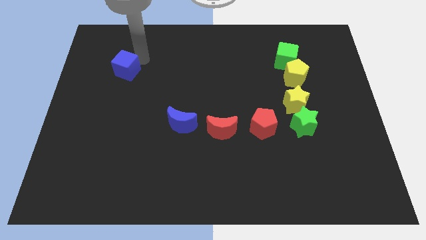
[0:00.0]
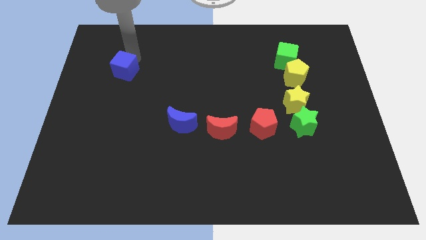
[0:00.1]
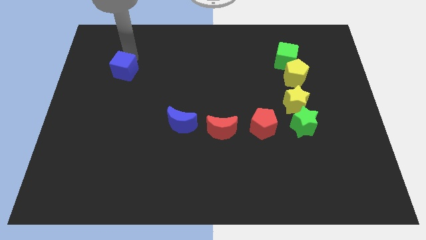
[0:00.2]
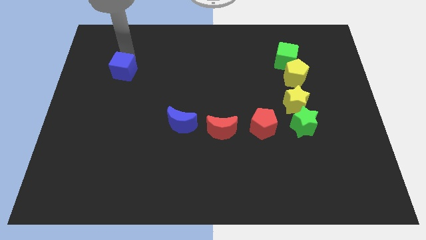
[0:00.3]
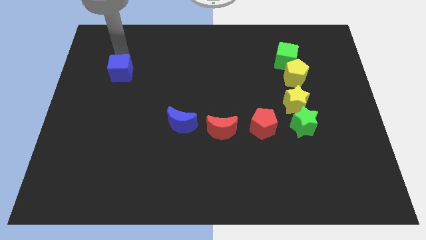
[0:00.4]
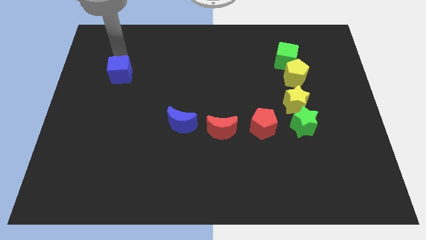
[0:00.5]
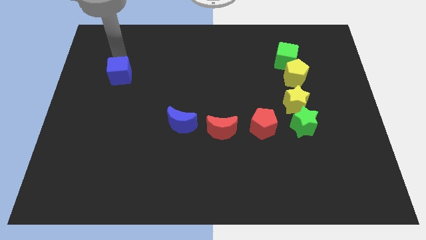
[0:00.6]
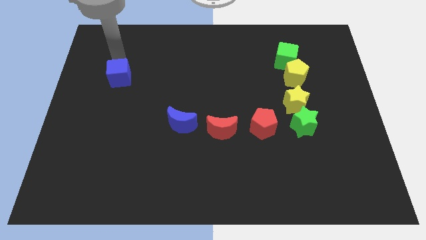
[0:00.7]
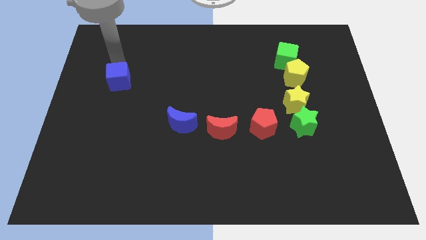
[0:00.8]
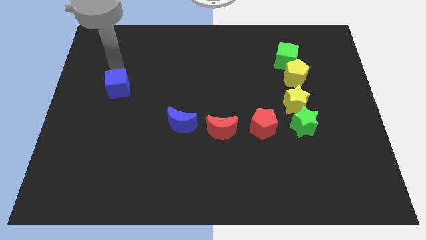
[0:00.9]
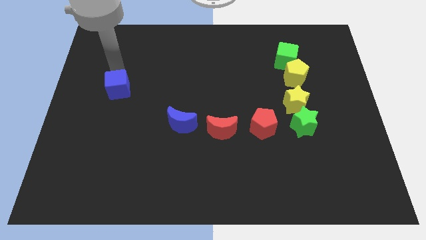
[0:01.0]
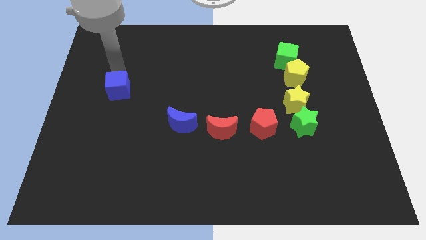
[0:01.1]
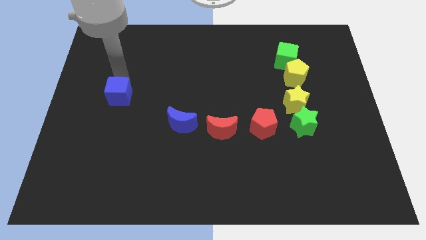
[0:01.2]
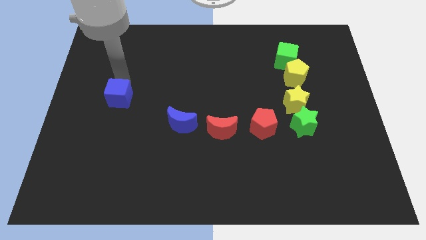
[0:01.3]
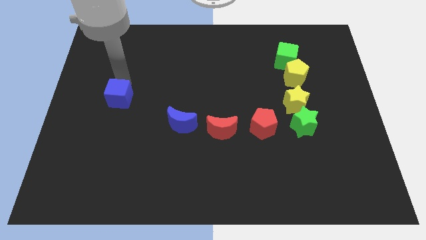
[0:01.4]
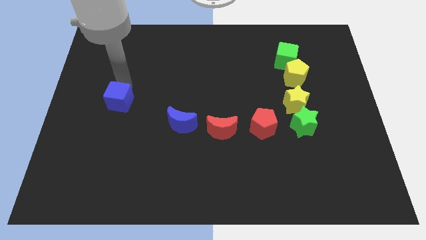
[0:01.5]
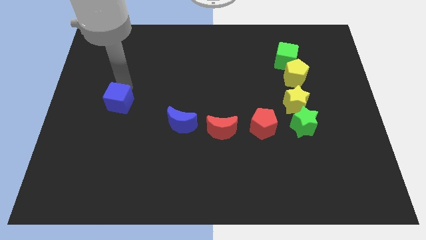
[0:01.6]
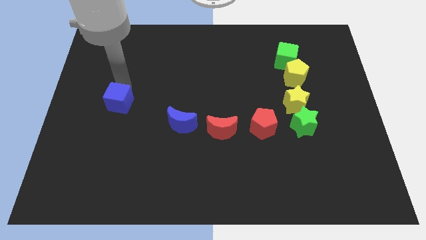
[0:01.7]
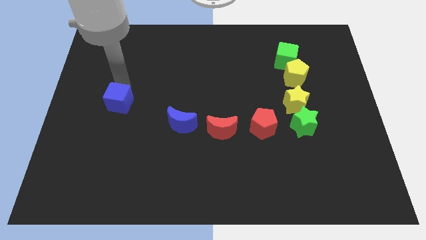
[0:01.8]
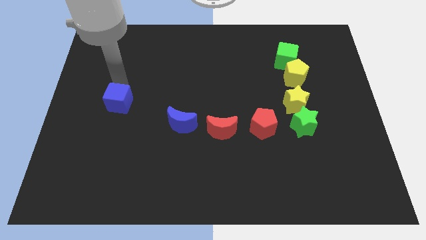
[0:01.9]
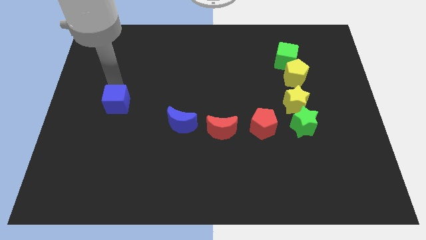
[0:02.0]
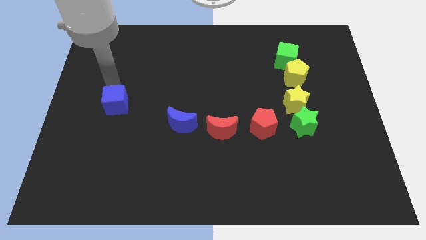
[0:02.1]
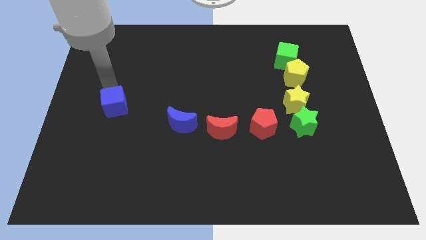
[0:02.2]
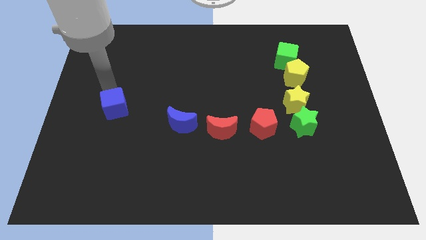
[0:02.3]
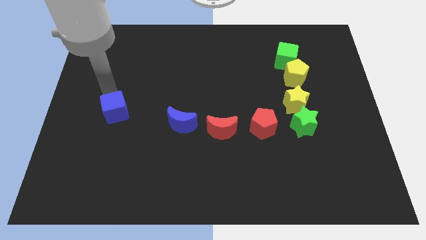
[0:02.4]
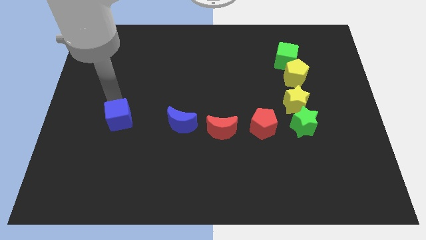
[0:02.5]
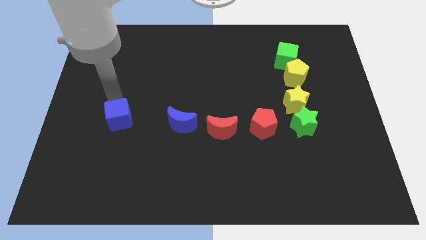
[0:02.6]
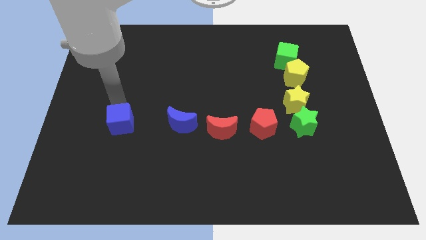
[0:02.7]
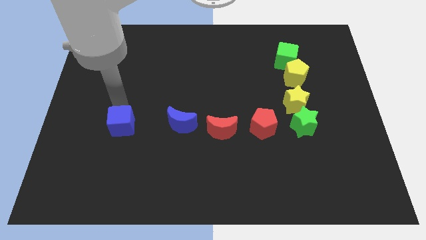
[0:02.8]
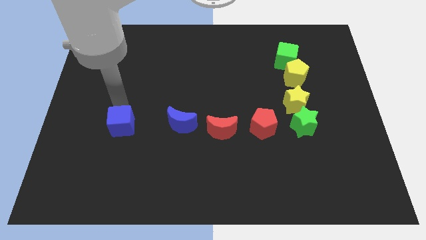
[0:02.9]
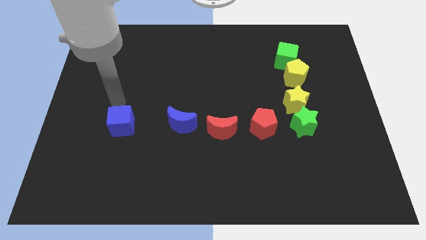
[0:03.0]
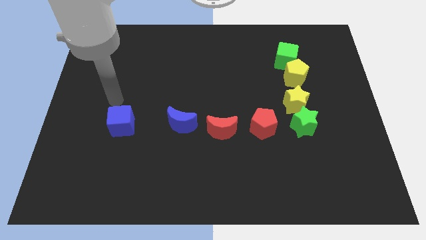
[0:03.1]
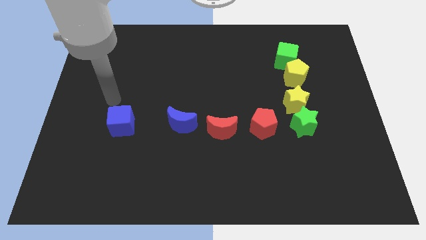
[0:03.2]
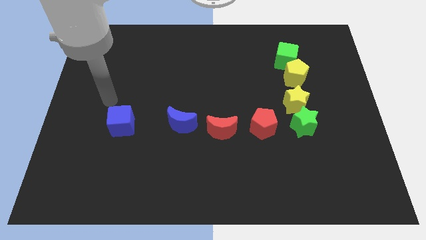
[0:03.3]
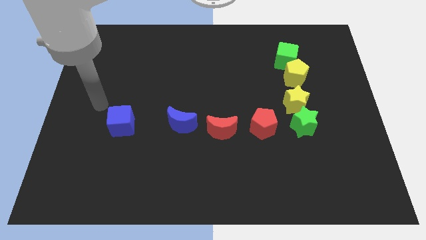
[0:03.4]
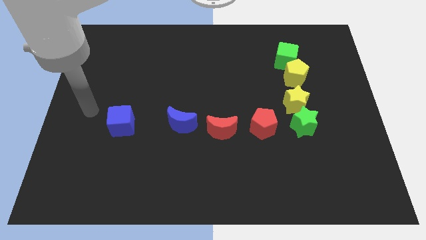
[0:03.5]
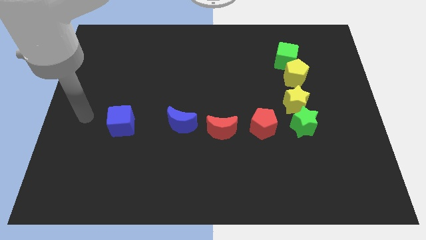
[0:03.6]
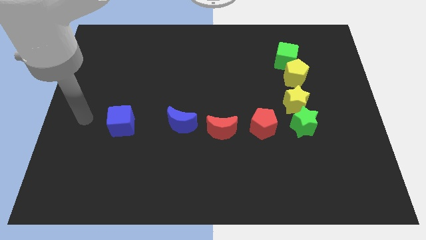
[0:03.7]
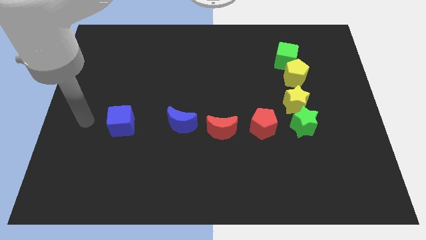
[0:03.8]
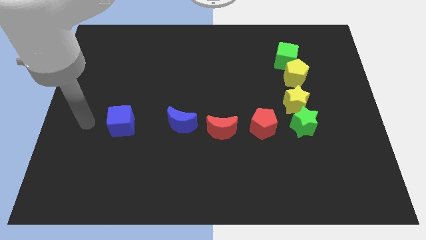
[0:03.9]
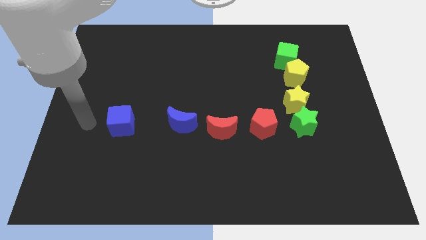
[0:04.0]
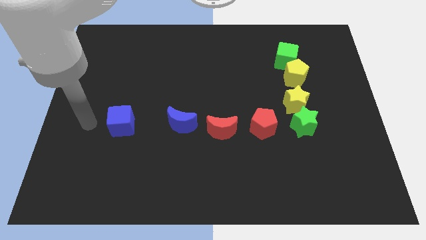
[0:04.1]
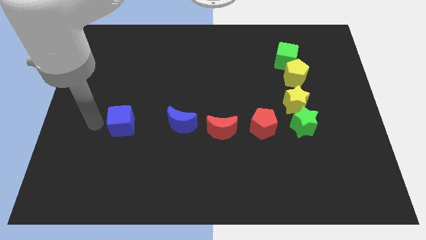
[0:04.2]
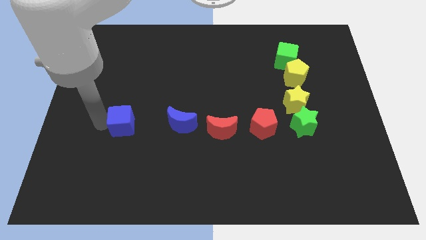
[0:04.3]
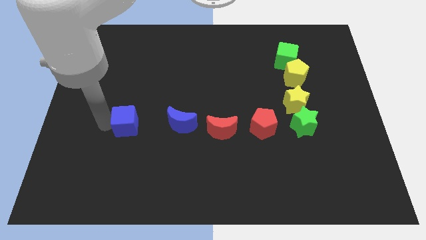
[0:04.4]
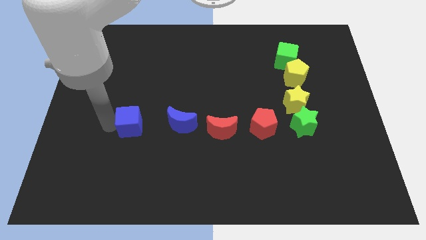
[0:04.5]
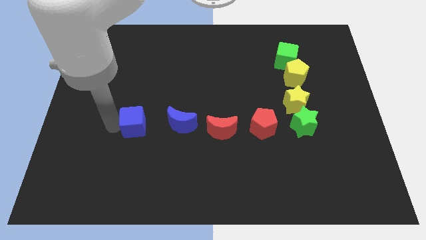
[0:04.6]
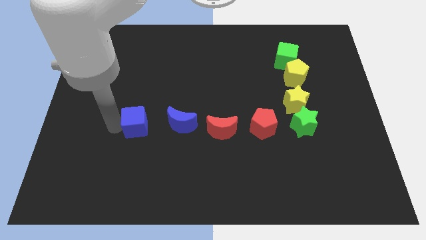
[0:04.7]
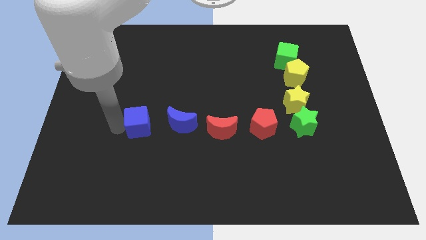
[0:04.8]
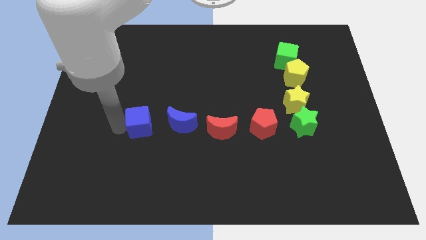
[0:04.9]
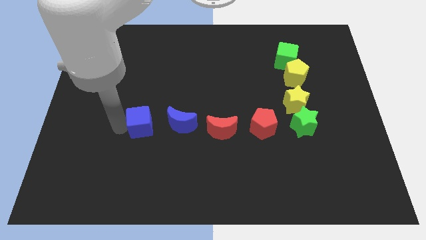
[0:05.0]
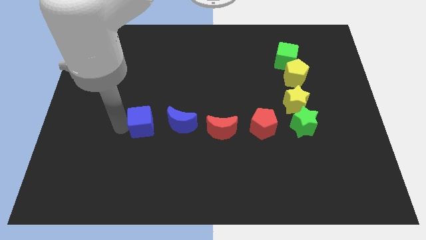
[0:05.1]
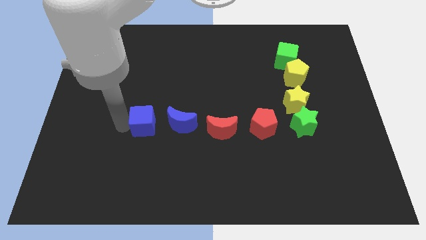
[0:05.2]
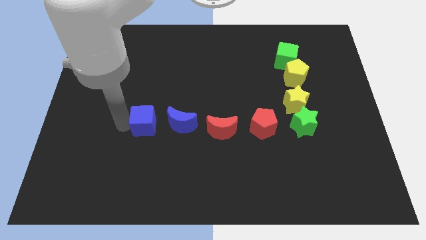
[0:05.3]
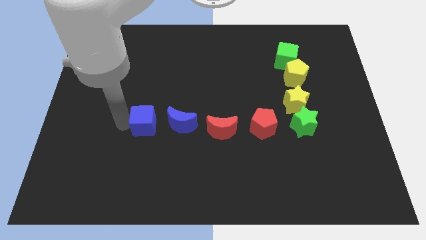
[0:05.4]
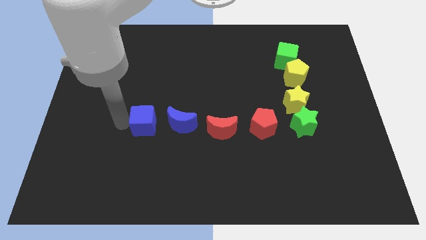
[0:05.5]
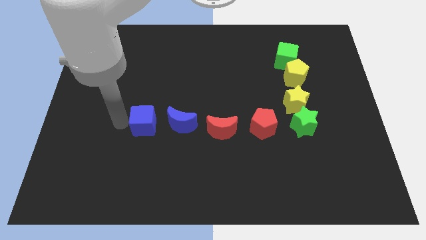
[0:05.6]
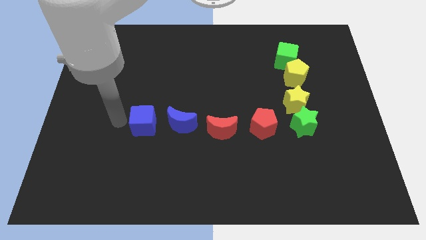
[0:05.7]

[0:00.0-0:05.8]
move the blue cube close to the blue moon

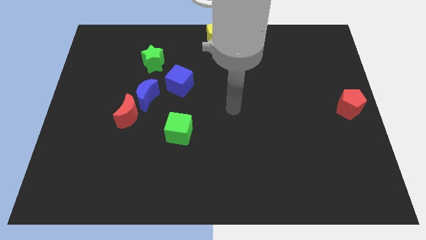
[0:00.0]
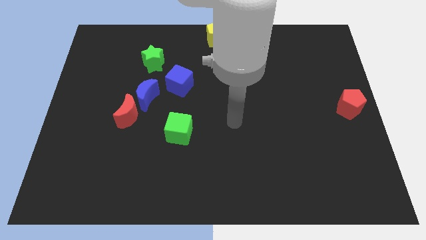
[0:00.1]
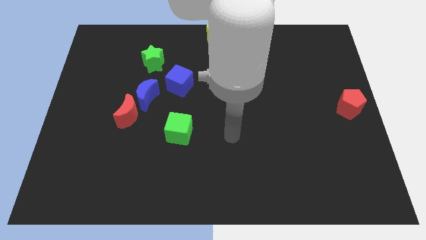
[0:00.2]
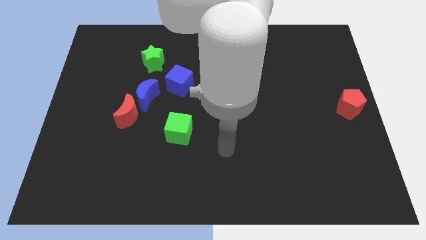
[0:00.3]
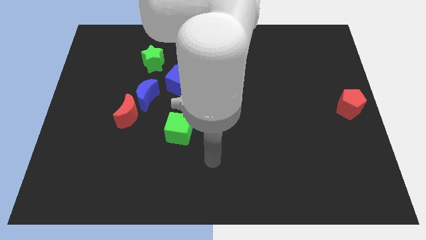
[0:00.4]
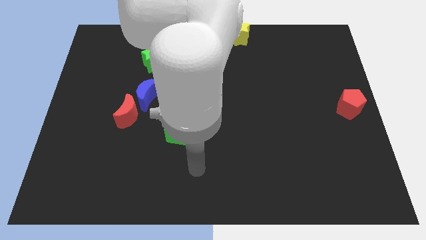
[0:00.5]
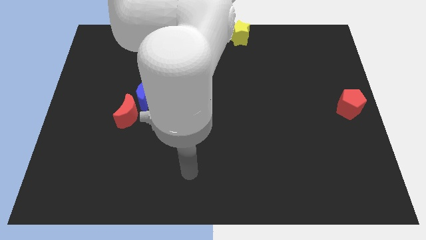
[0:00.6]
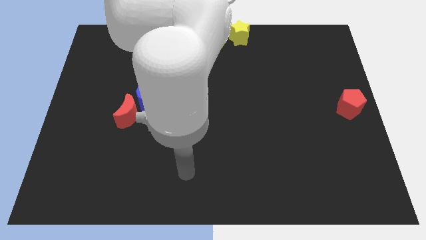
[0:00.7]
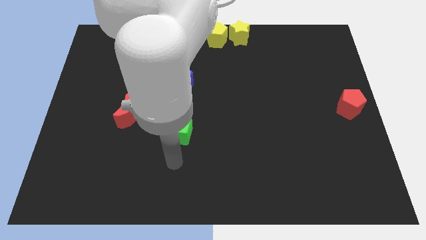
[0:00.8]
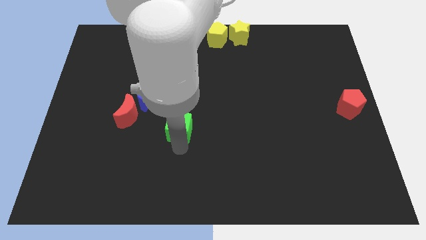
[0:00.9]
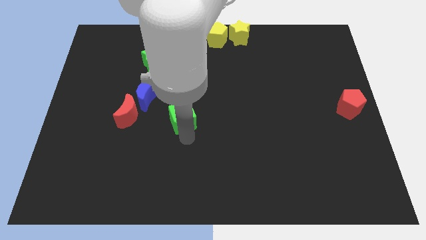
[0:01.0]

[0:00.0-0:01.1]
place your arm at the bottom of the green cube

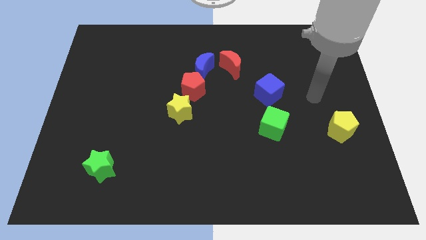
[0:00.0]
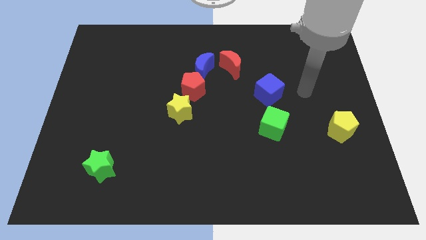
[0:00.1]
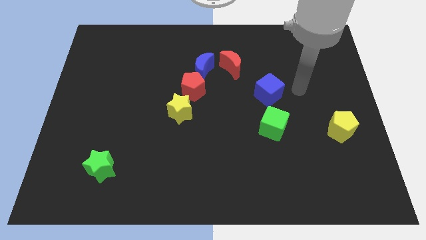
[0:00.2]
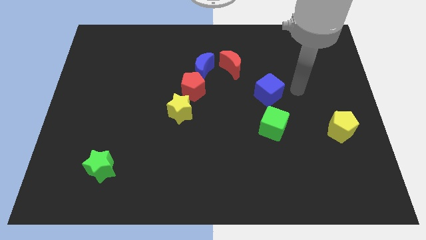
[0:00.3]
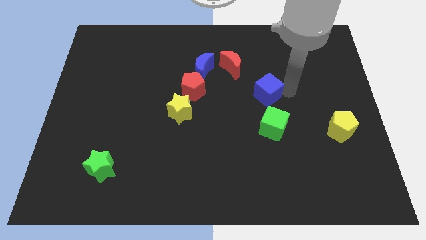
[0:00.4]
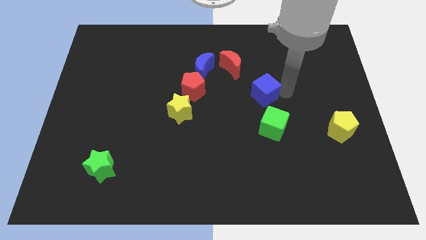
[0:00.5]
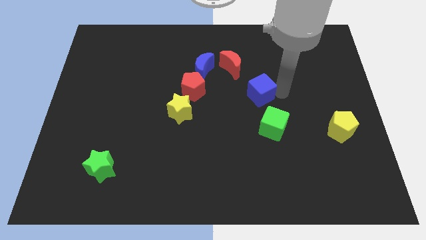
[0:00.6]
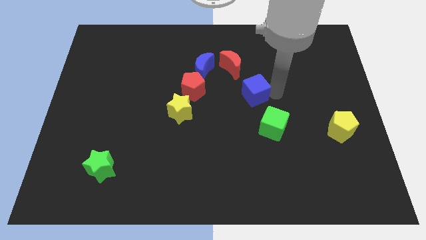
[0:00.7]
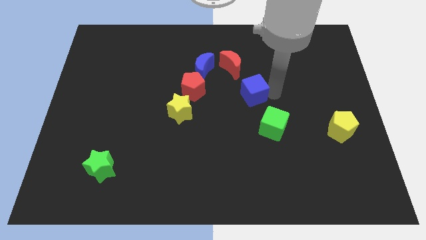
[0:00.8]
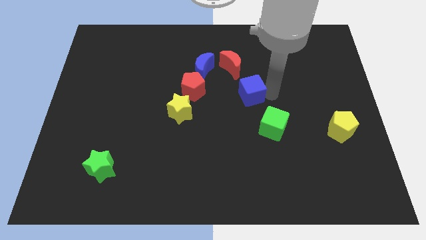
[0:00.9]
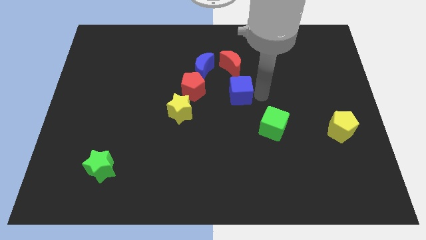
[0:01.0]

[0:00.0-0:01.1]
place the blue cube below the red crescent

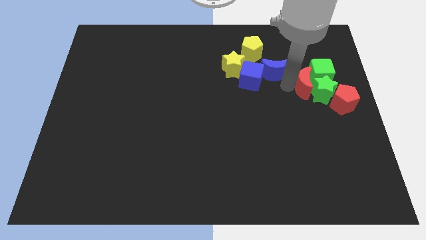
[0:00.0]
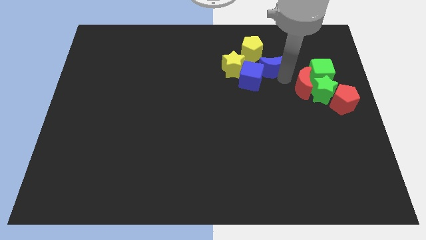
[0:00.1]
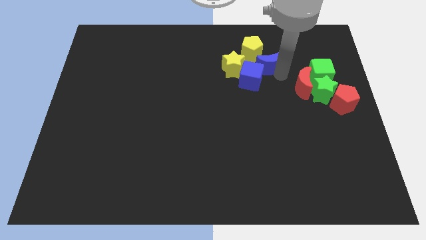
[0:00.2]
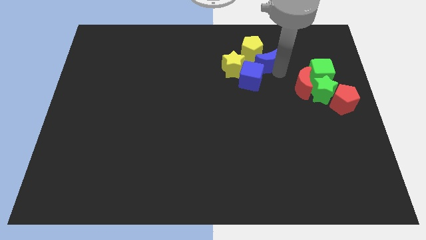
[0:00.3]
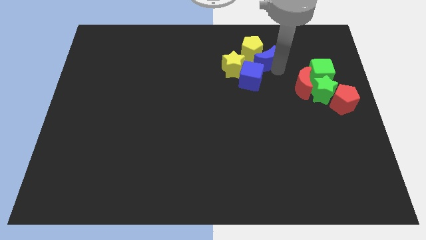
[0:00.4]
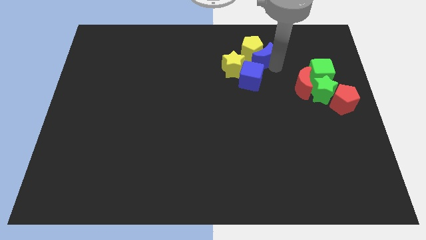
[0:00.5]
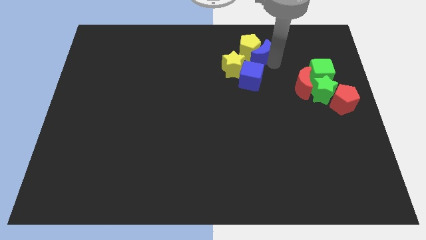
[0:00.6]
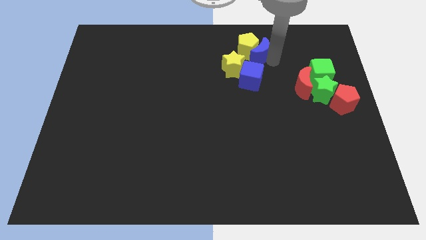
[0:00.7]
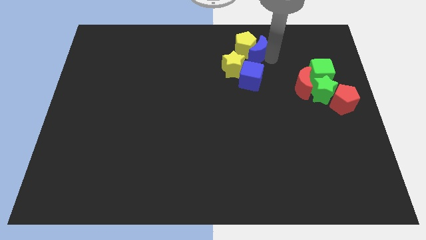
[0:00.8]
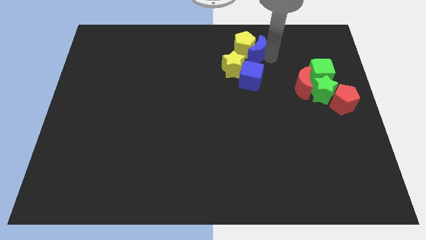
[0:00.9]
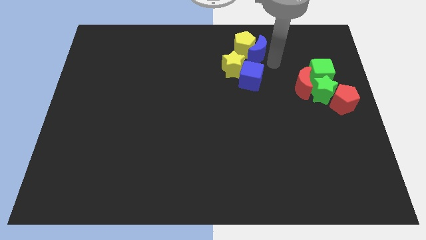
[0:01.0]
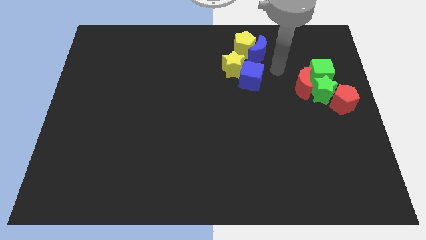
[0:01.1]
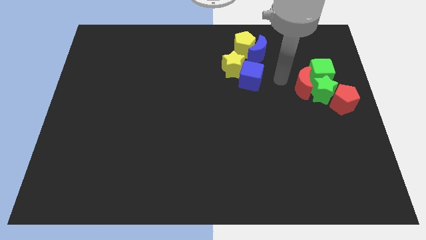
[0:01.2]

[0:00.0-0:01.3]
push the blue crescent into the yellow pentagon
